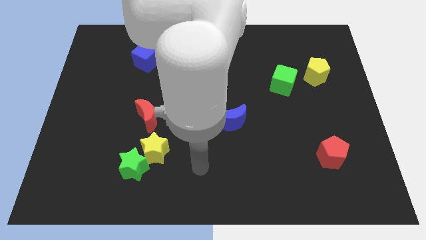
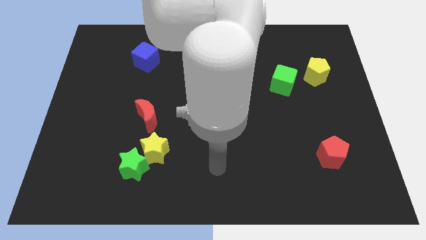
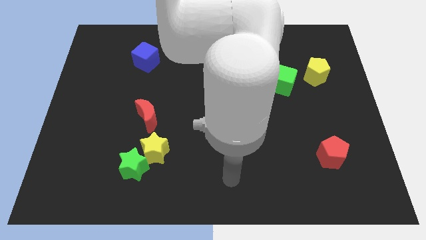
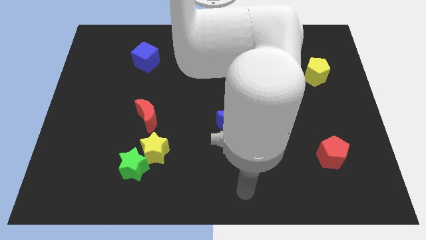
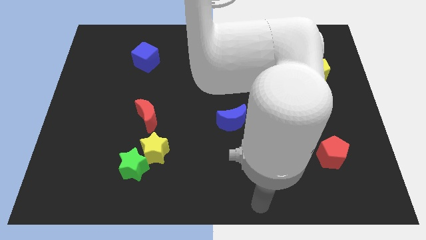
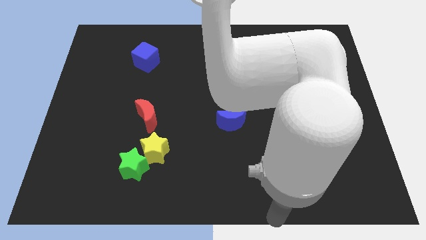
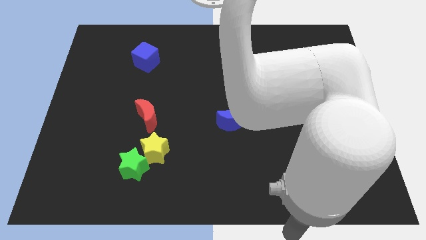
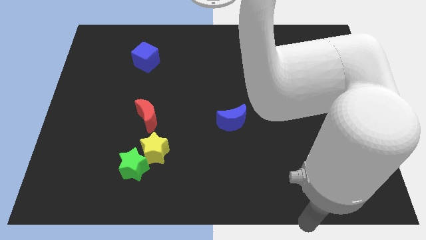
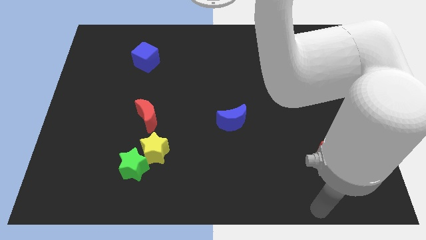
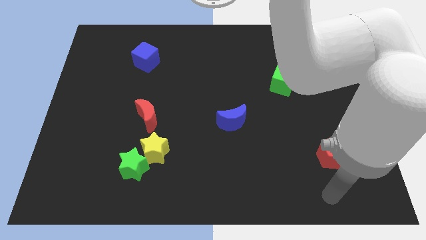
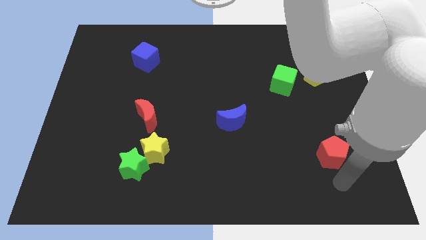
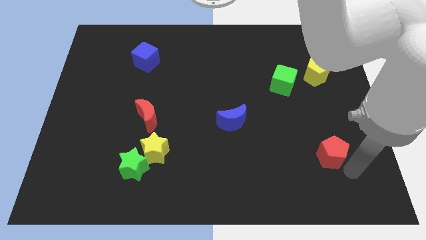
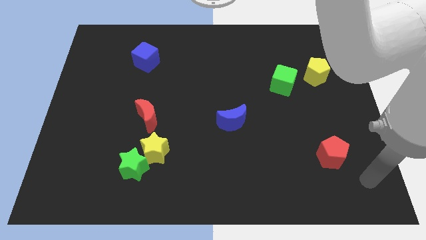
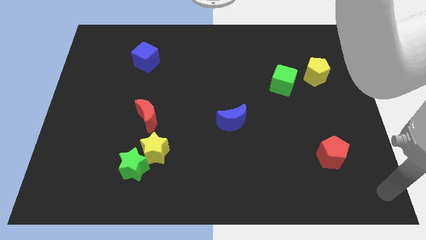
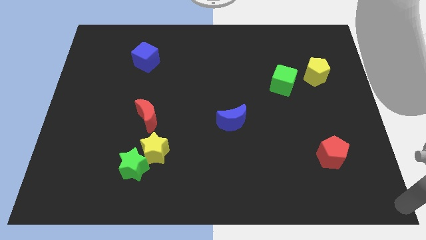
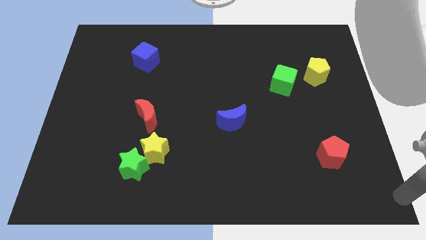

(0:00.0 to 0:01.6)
go and point your hand at the bottom right corner of the board

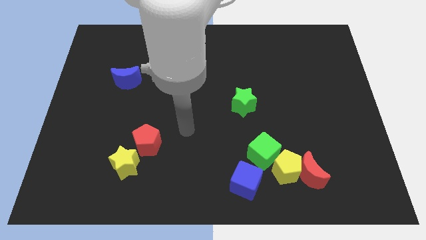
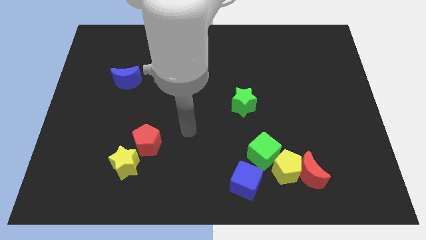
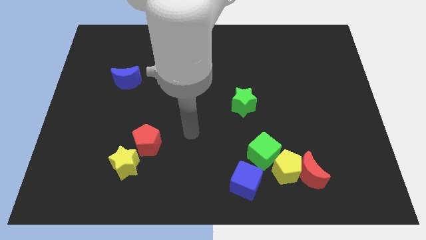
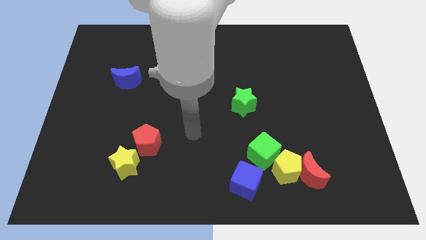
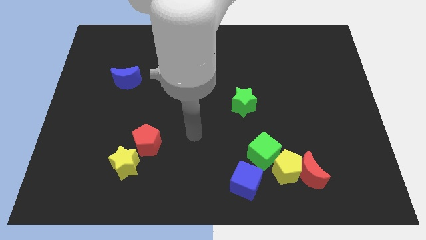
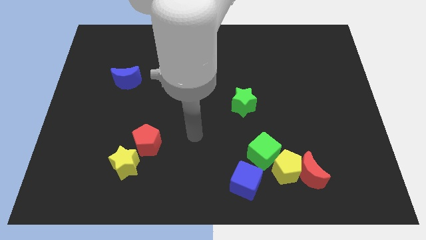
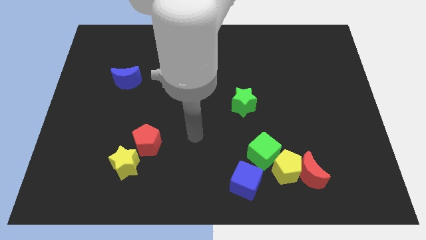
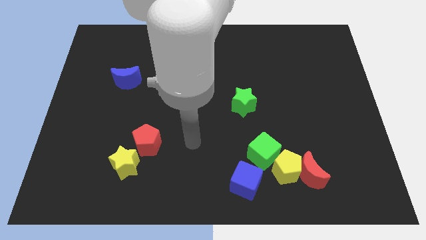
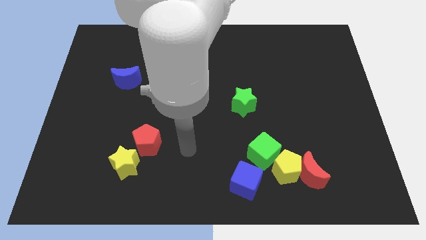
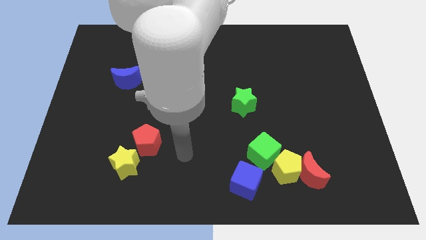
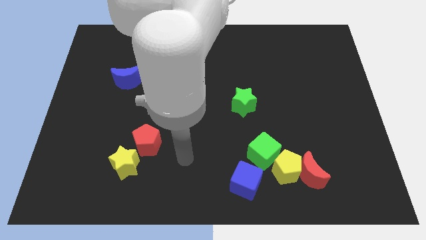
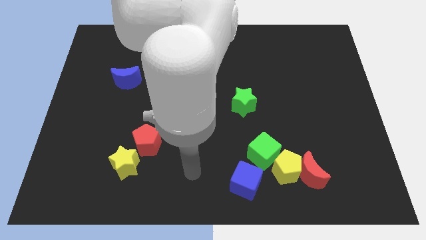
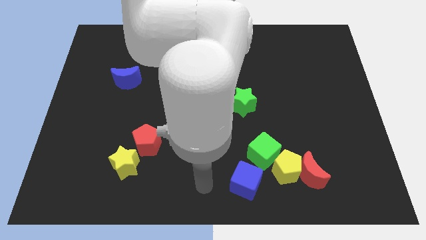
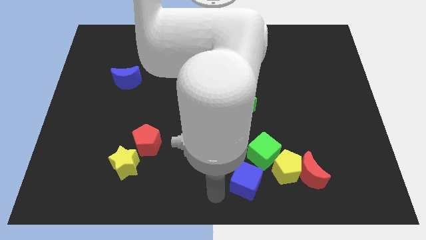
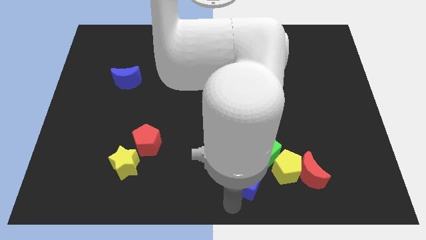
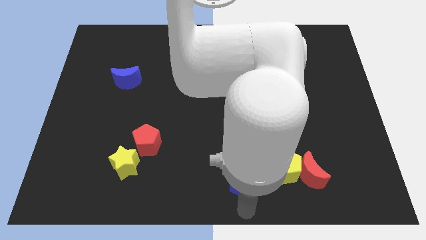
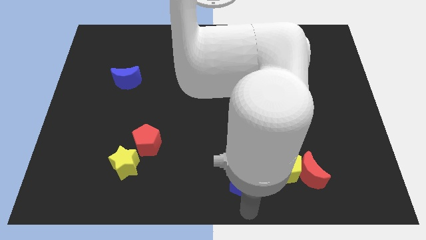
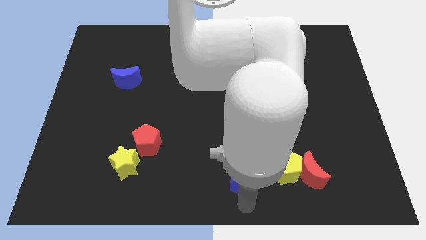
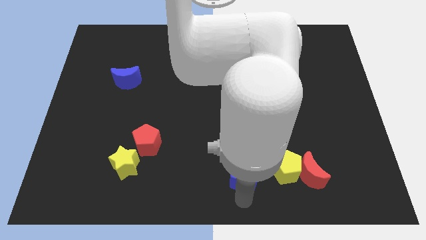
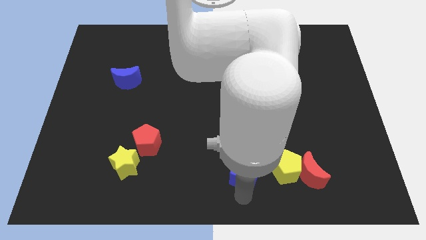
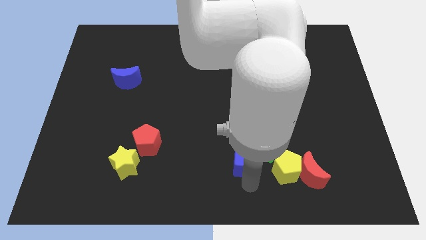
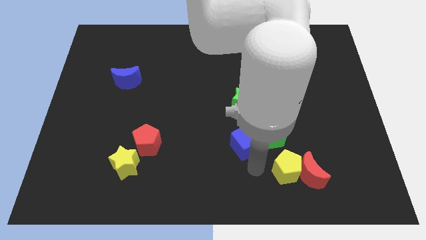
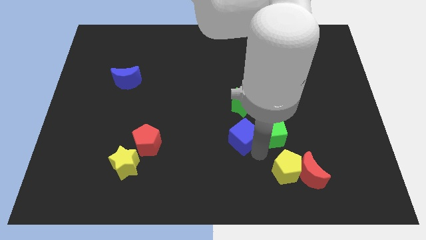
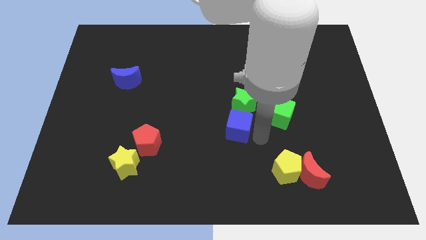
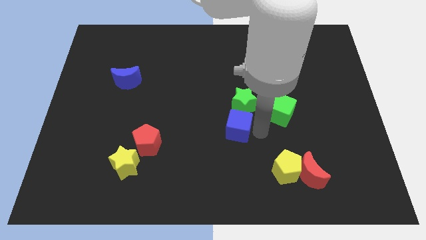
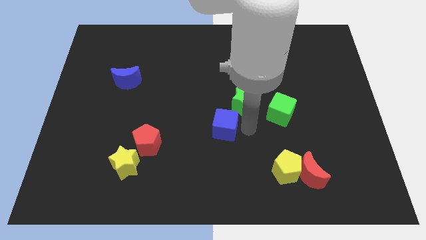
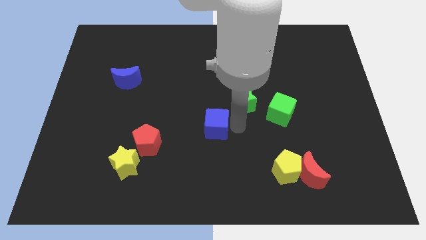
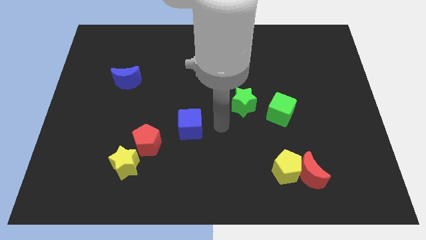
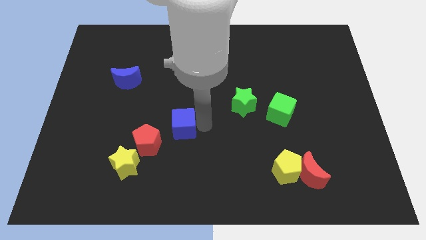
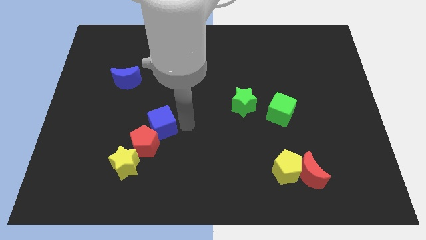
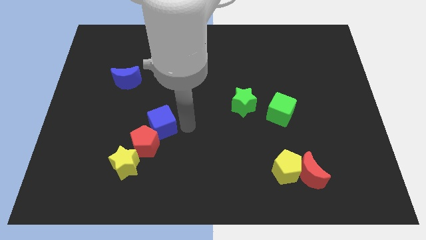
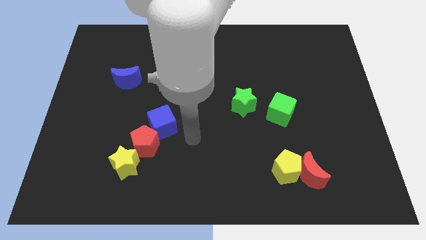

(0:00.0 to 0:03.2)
push the blue cube above the red pentagon

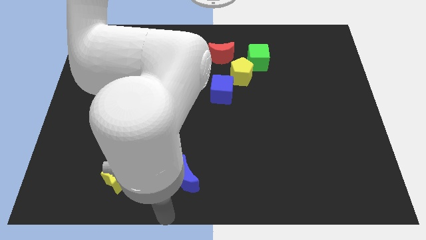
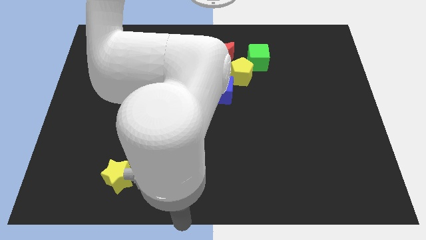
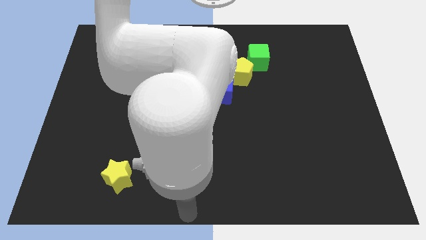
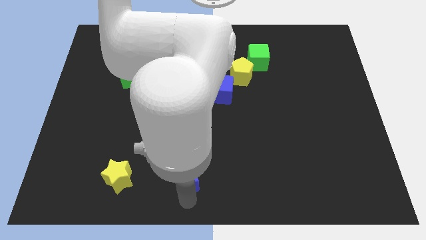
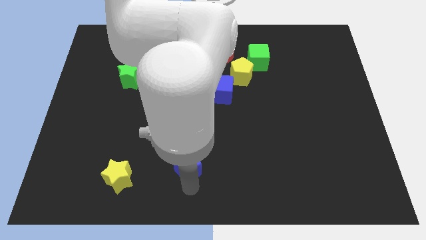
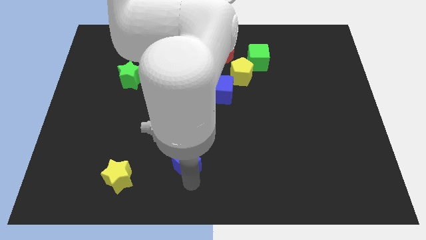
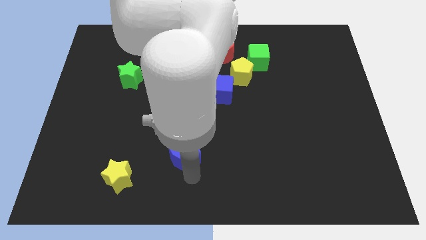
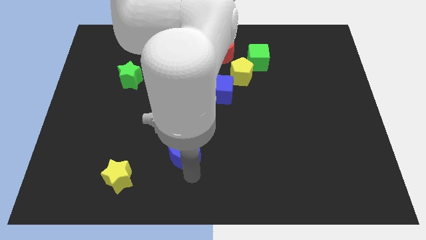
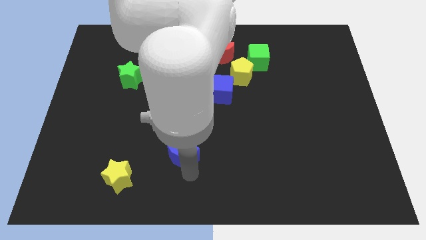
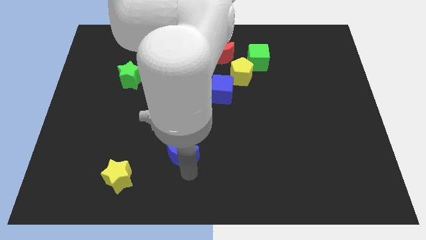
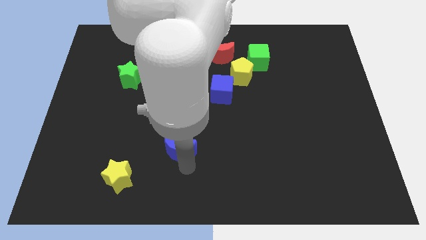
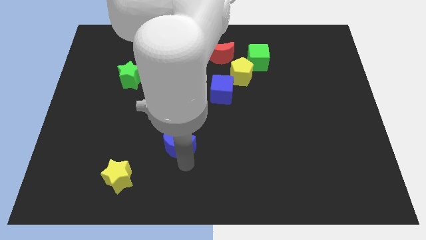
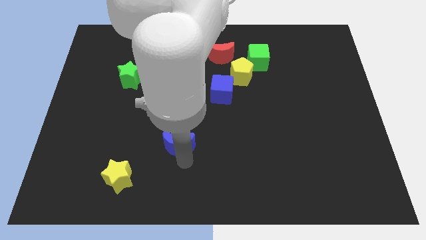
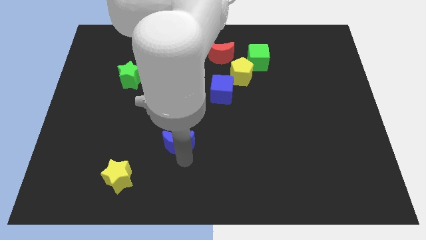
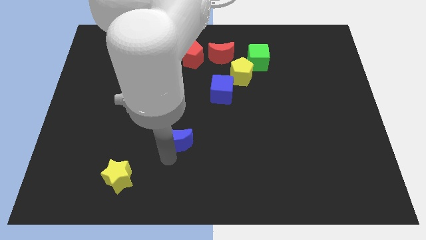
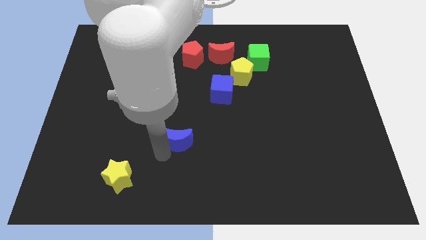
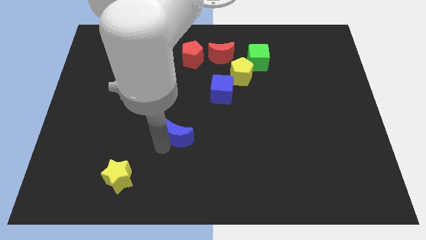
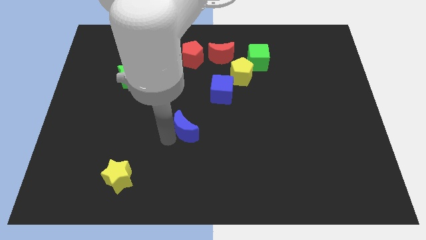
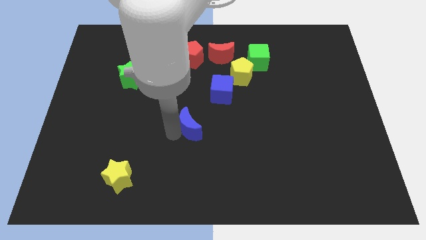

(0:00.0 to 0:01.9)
push red crescent upwards

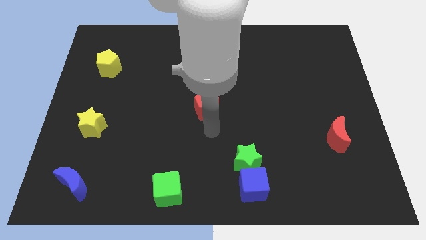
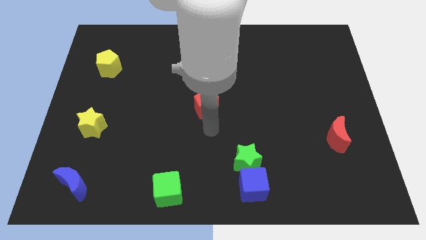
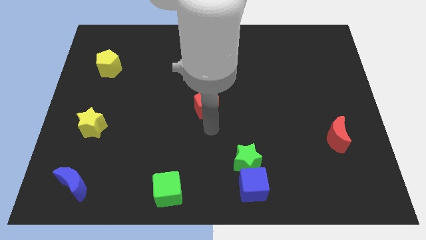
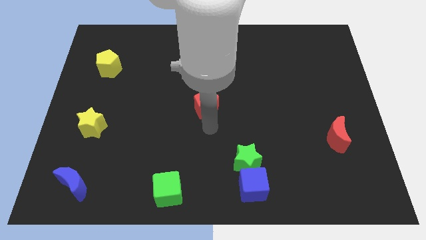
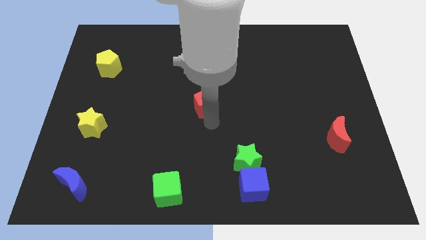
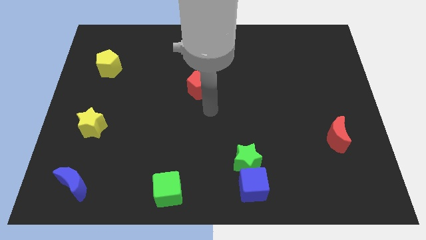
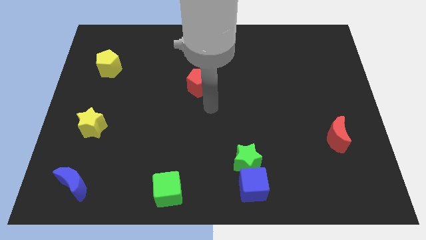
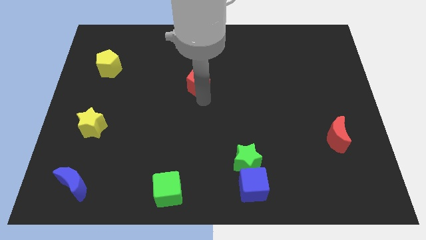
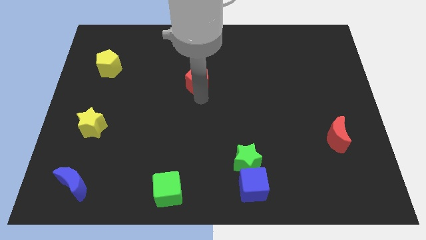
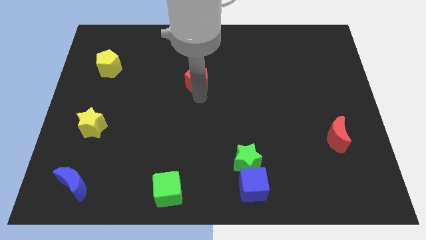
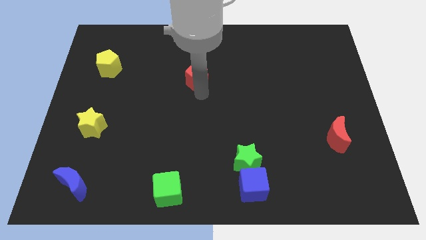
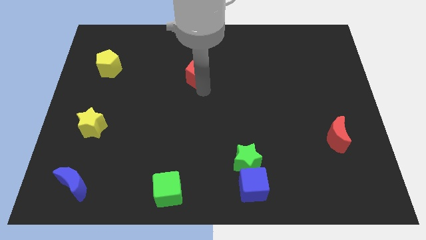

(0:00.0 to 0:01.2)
push the red crescent to the top of the board

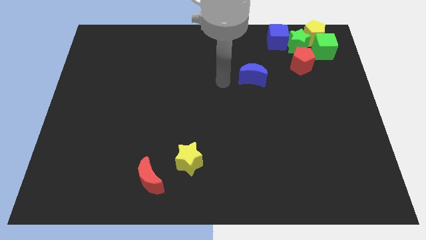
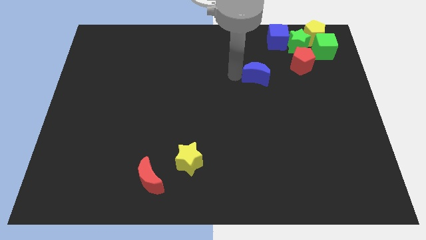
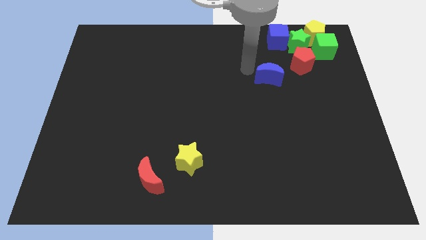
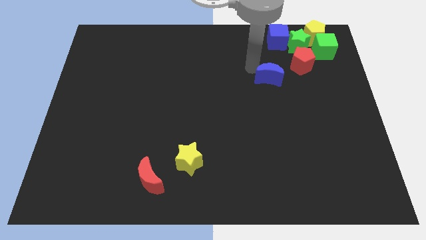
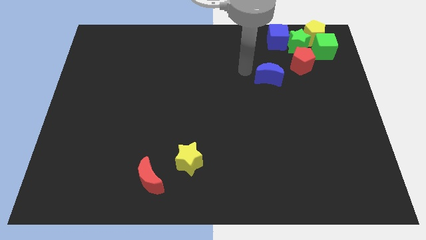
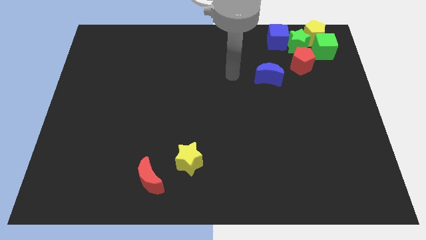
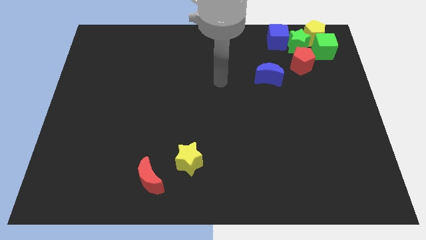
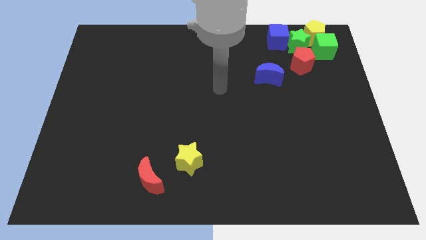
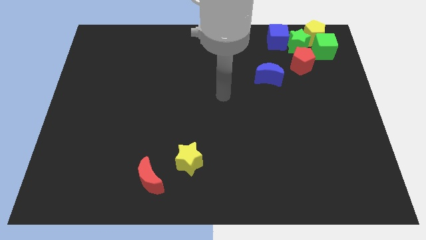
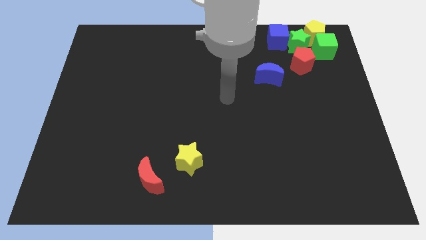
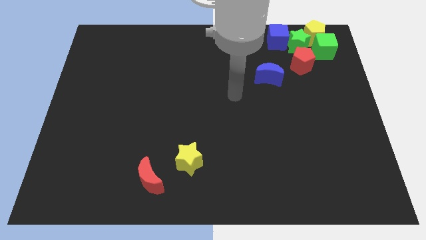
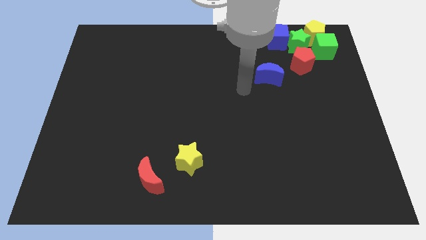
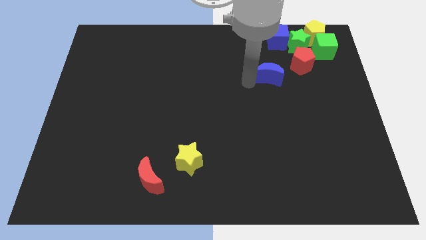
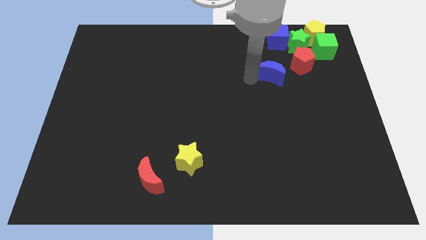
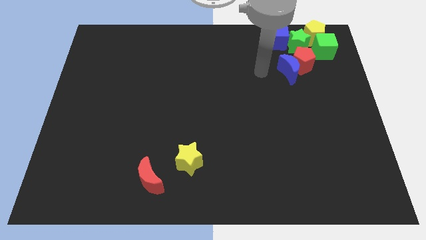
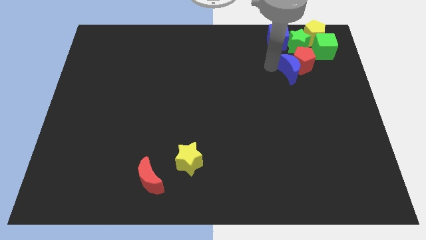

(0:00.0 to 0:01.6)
push the blue crescent towards the red pentagon
